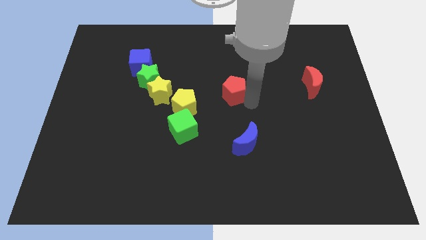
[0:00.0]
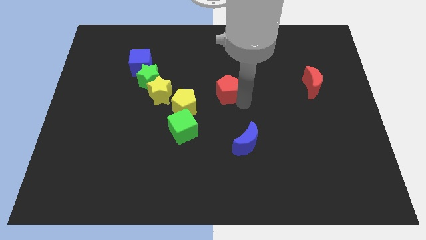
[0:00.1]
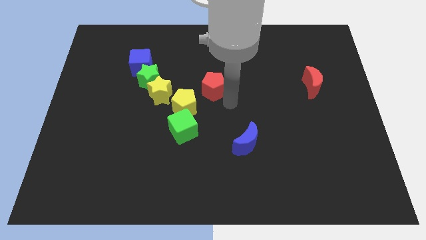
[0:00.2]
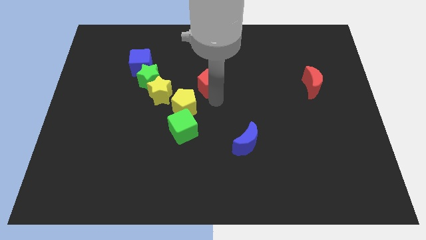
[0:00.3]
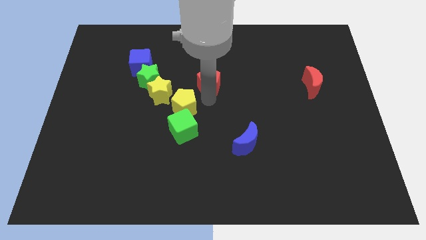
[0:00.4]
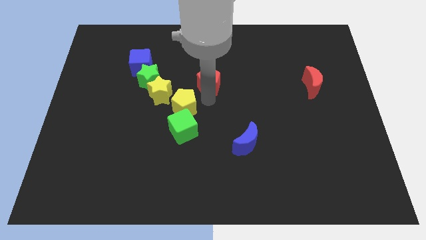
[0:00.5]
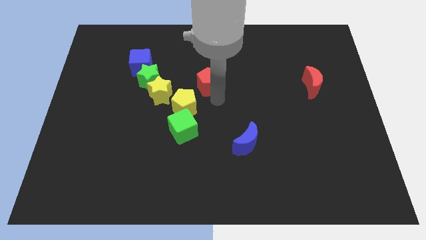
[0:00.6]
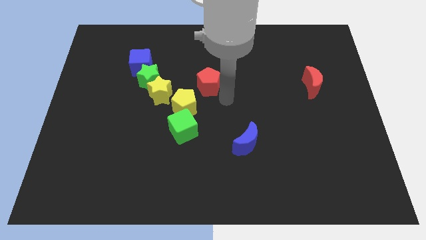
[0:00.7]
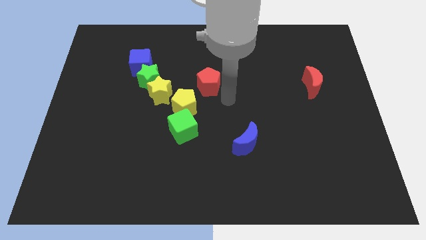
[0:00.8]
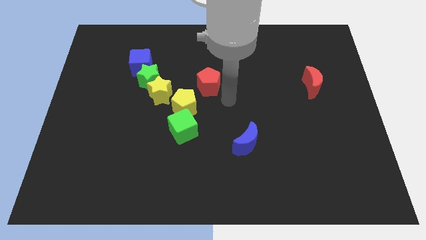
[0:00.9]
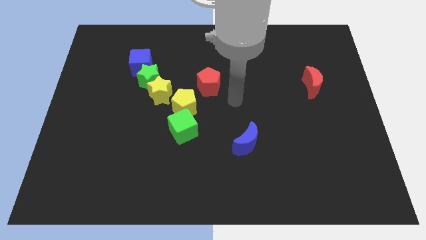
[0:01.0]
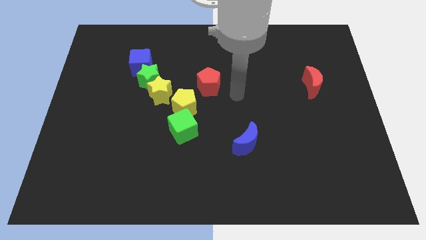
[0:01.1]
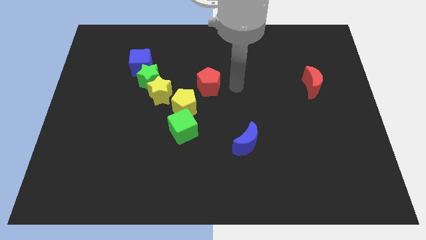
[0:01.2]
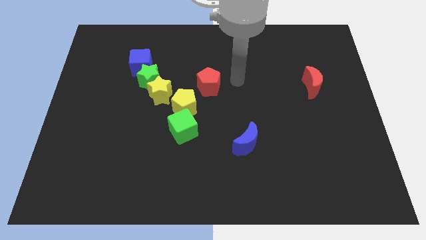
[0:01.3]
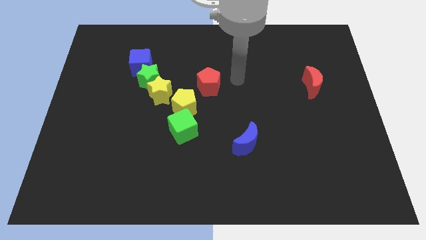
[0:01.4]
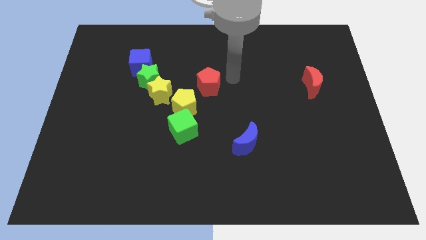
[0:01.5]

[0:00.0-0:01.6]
place the red pentagon diagonal above the yellow pentagon

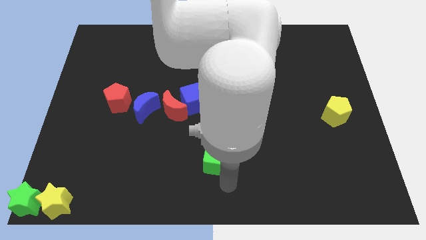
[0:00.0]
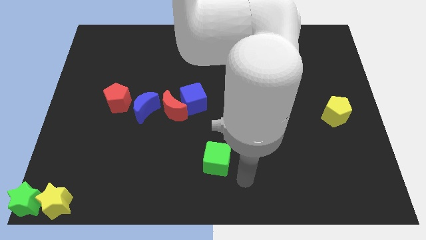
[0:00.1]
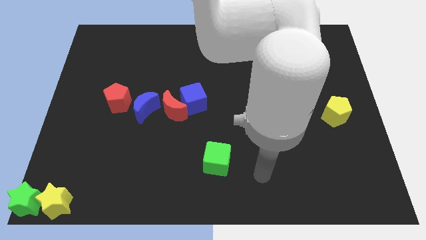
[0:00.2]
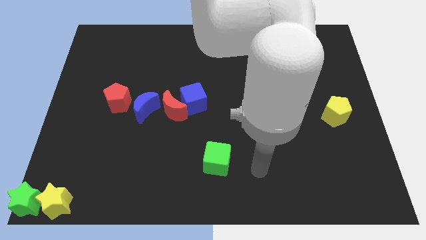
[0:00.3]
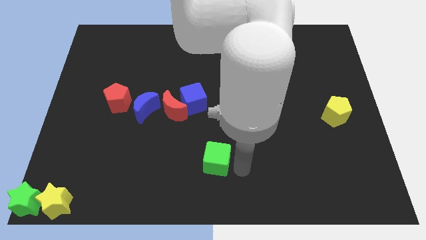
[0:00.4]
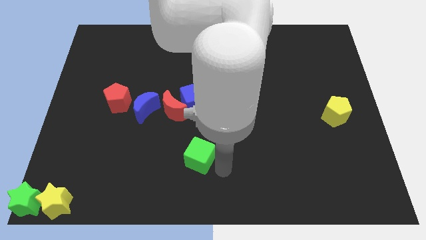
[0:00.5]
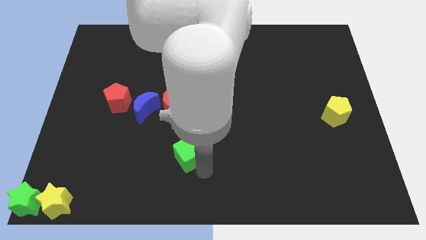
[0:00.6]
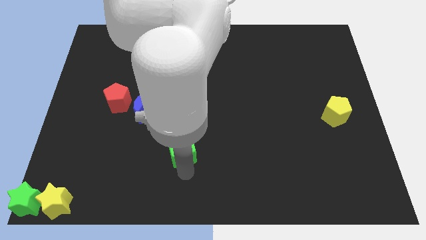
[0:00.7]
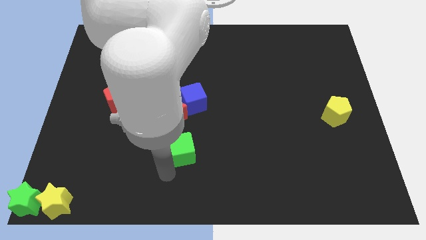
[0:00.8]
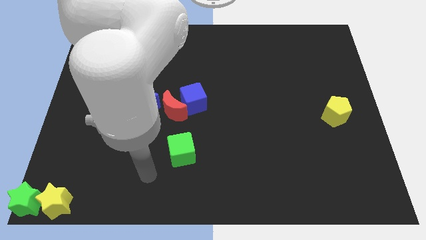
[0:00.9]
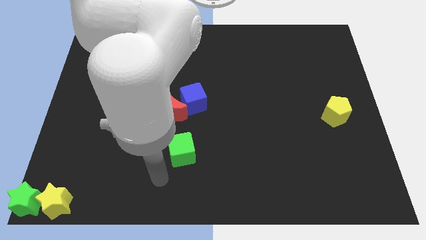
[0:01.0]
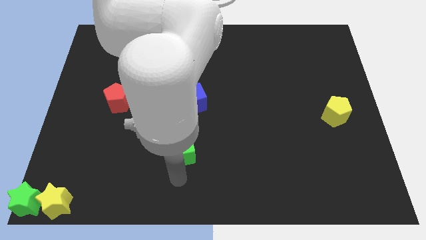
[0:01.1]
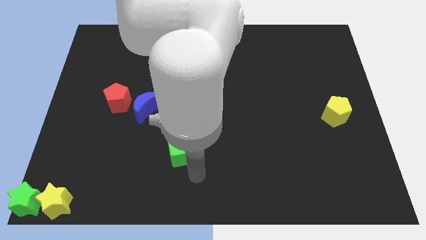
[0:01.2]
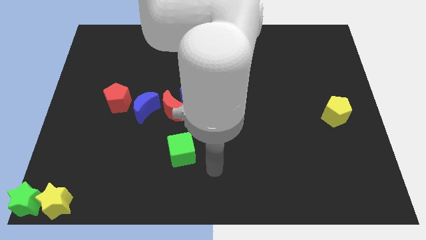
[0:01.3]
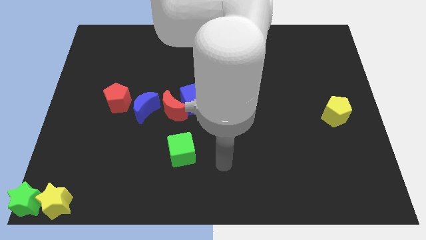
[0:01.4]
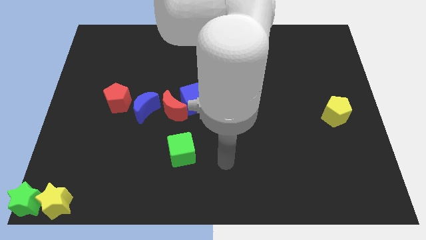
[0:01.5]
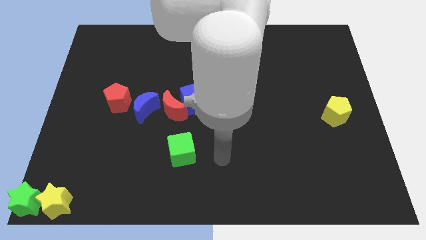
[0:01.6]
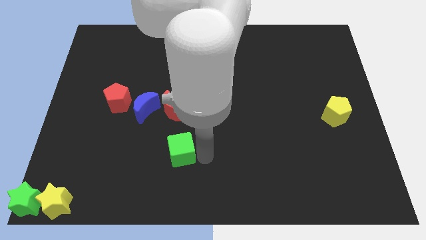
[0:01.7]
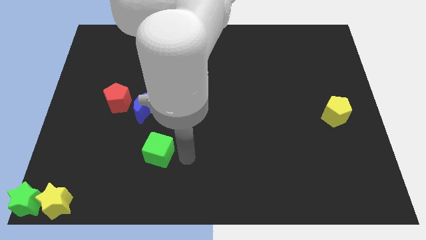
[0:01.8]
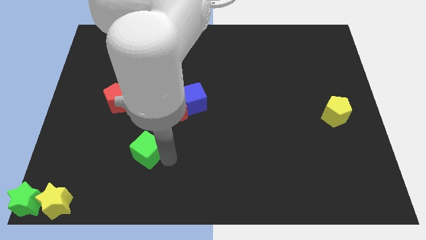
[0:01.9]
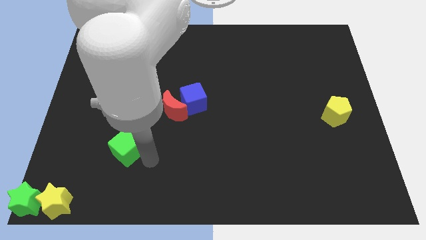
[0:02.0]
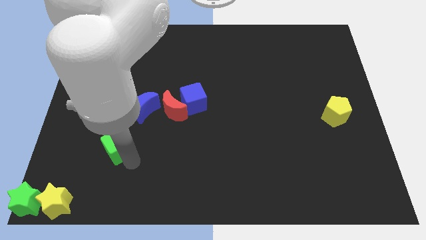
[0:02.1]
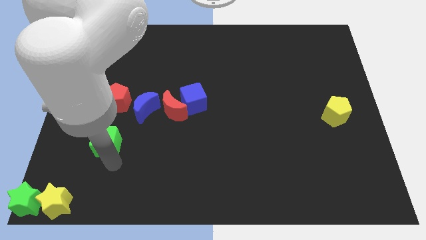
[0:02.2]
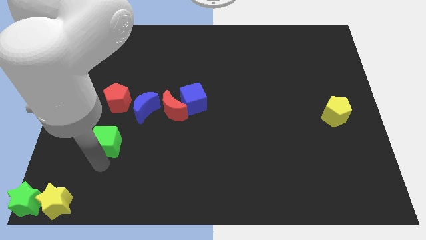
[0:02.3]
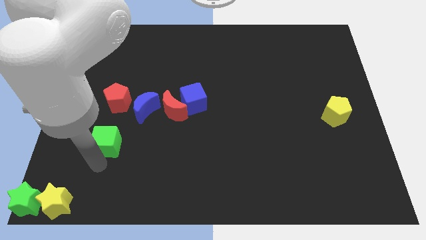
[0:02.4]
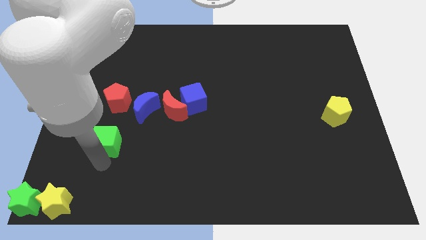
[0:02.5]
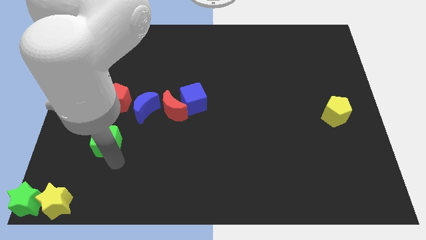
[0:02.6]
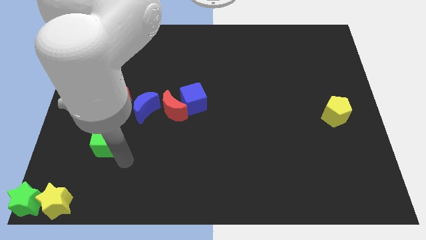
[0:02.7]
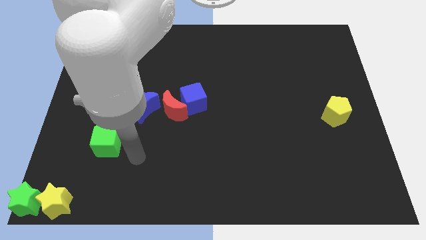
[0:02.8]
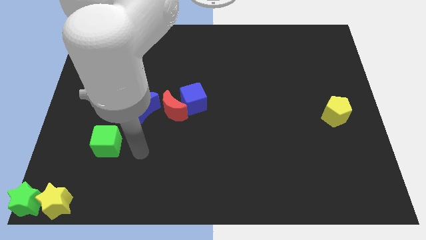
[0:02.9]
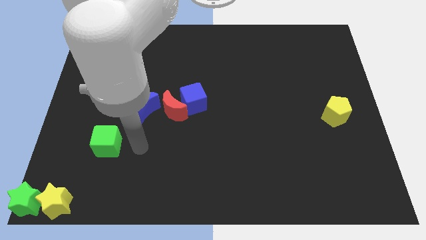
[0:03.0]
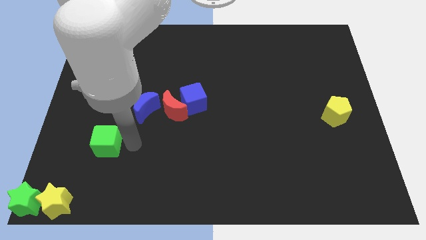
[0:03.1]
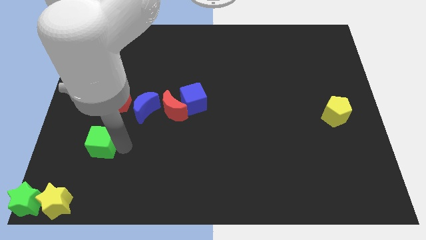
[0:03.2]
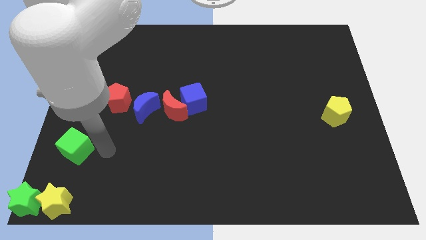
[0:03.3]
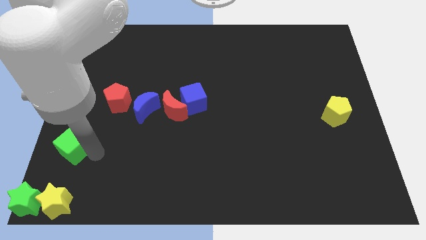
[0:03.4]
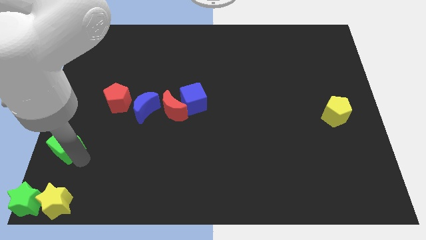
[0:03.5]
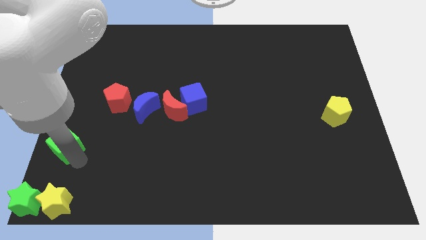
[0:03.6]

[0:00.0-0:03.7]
push the green cube to the left of the board

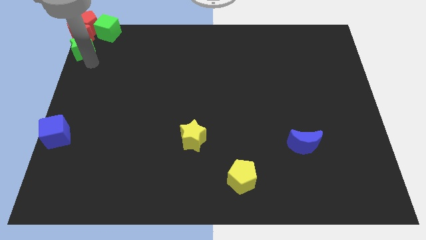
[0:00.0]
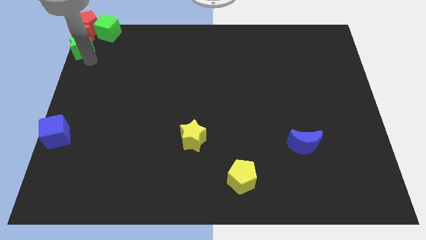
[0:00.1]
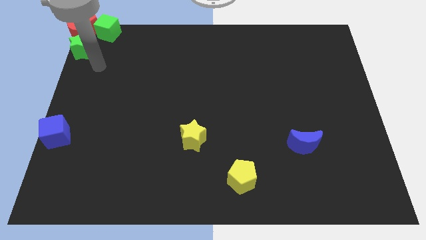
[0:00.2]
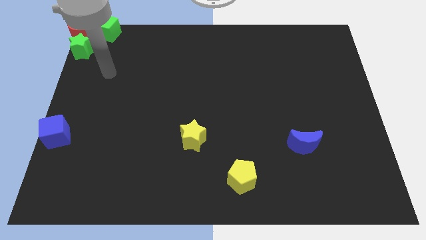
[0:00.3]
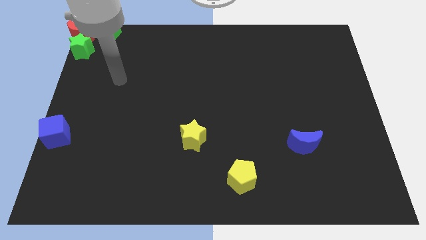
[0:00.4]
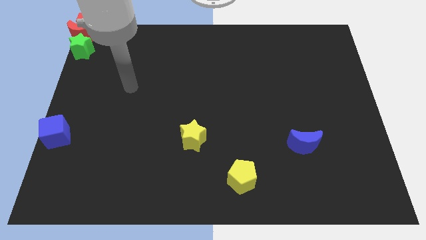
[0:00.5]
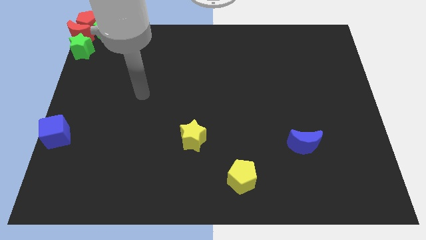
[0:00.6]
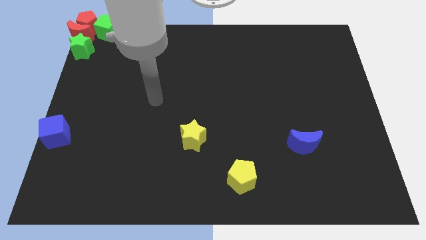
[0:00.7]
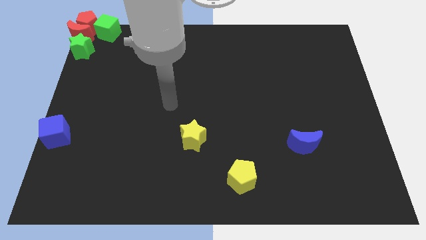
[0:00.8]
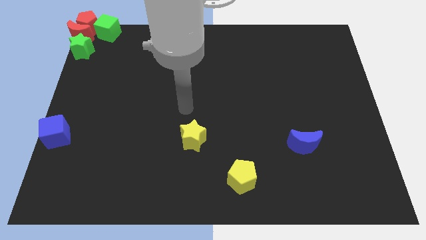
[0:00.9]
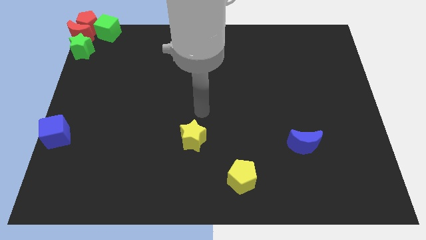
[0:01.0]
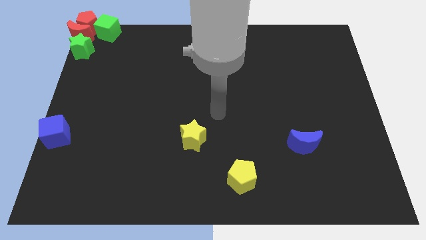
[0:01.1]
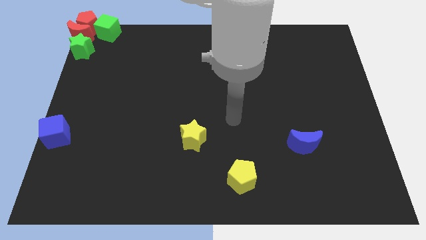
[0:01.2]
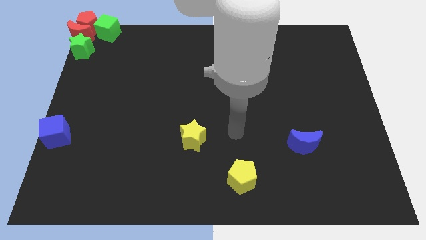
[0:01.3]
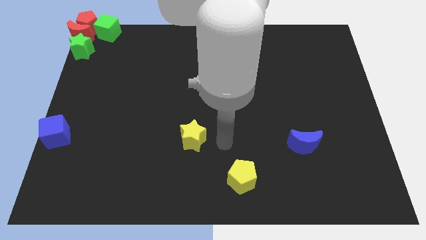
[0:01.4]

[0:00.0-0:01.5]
move your arm away from green star

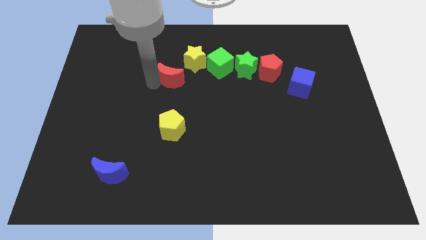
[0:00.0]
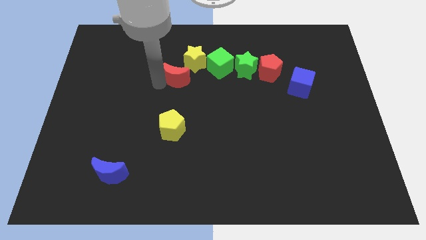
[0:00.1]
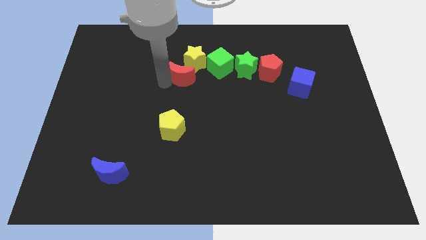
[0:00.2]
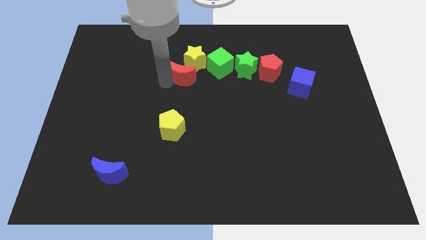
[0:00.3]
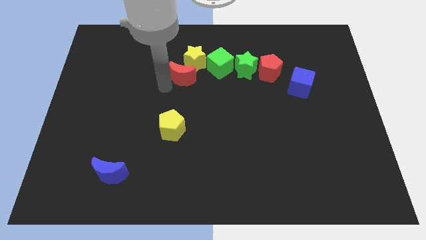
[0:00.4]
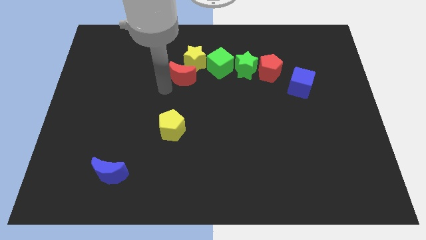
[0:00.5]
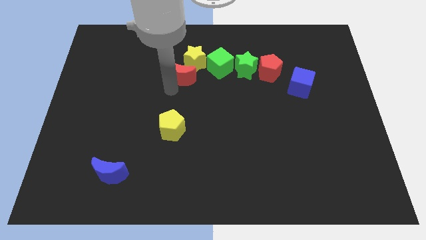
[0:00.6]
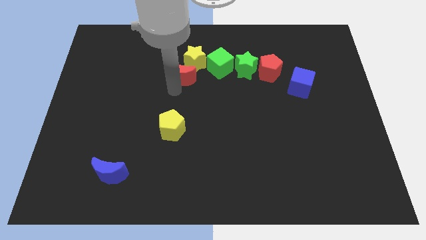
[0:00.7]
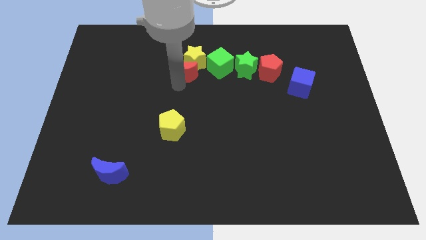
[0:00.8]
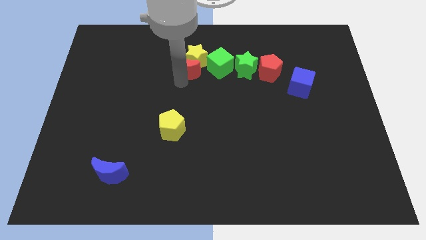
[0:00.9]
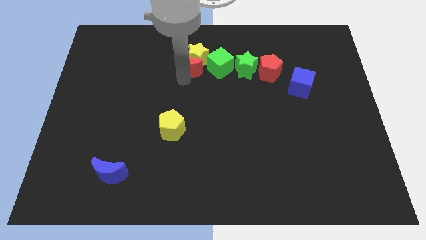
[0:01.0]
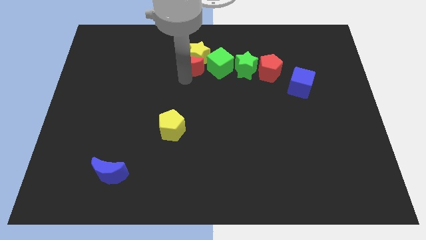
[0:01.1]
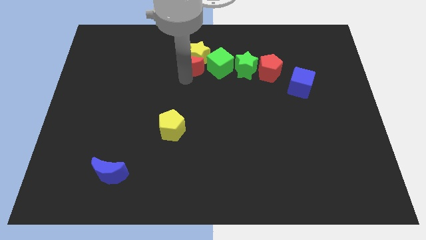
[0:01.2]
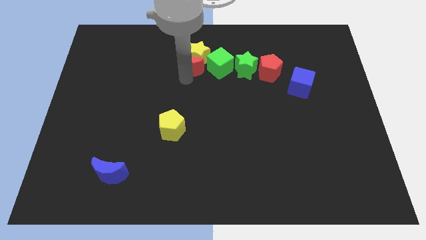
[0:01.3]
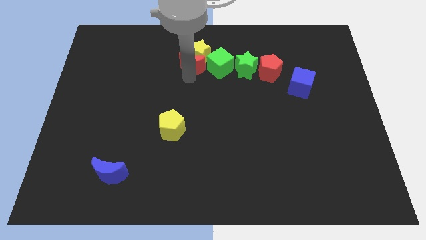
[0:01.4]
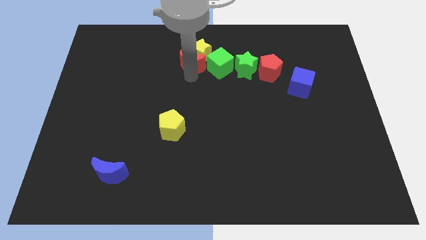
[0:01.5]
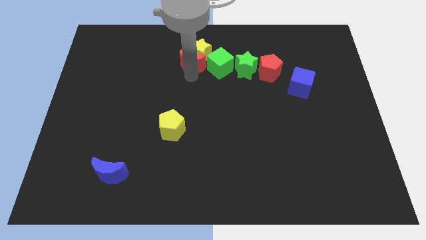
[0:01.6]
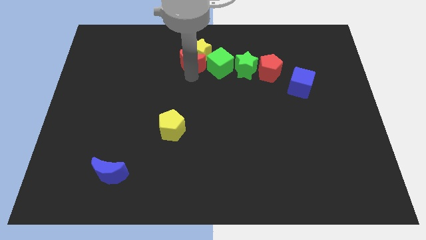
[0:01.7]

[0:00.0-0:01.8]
move the red moon into the yellow star

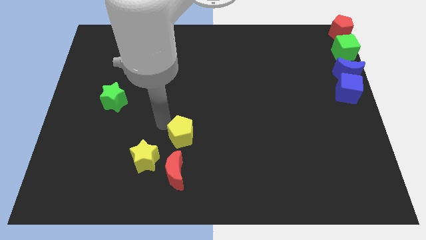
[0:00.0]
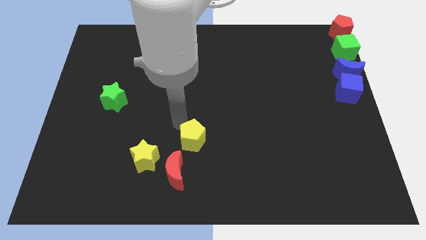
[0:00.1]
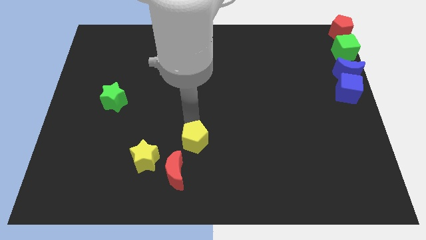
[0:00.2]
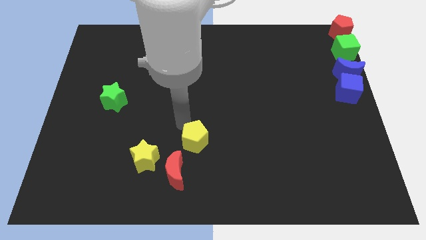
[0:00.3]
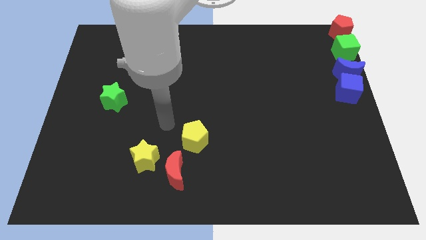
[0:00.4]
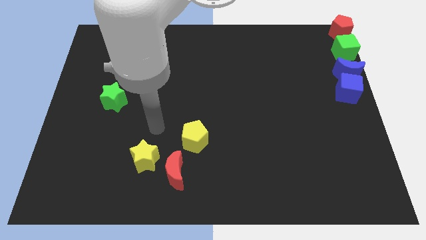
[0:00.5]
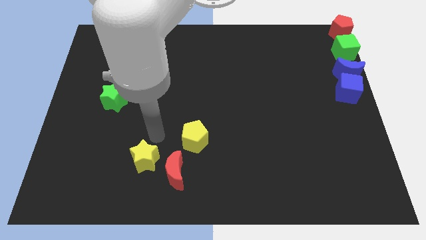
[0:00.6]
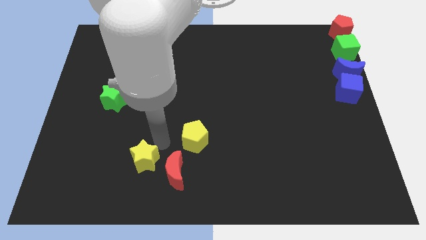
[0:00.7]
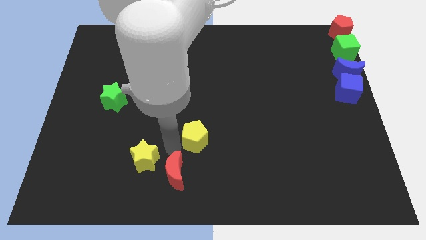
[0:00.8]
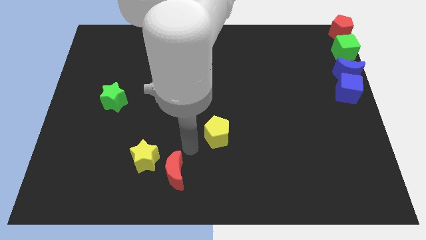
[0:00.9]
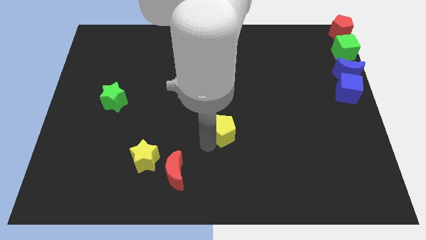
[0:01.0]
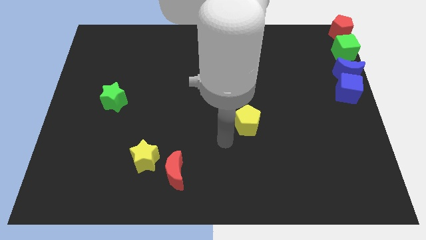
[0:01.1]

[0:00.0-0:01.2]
move the yellow pentagon diagonally on the top right side of the red crescent
